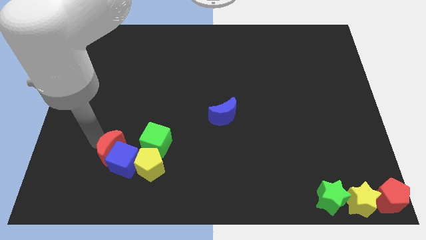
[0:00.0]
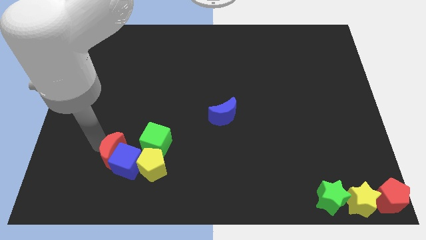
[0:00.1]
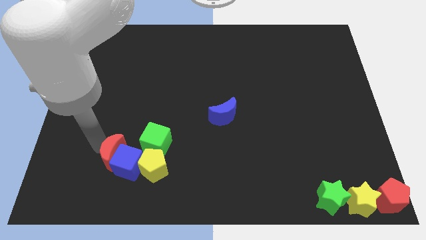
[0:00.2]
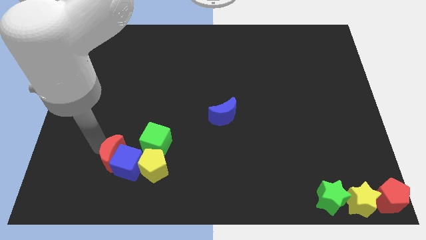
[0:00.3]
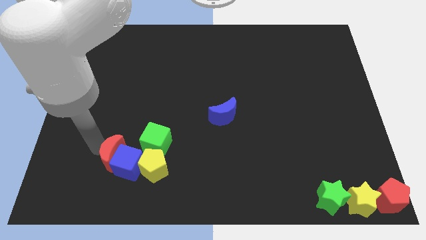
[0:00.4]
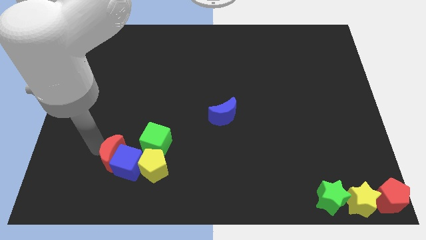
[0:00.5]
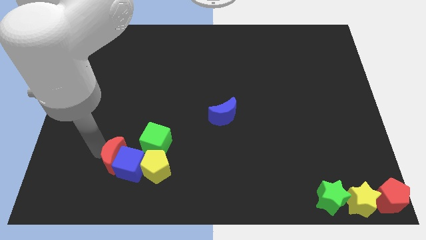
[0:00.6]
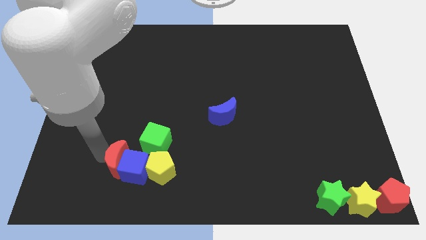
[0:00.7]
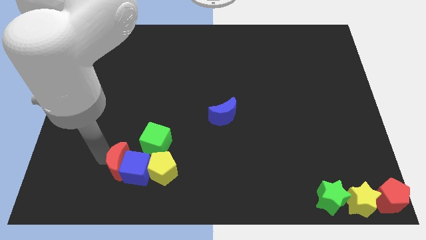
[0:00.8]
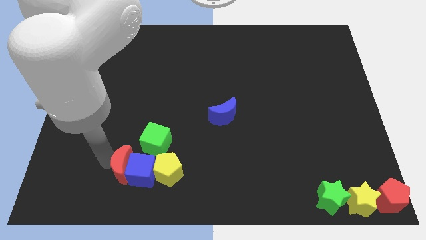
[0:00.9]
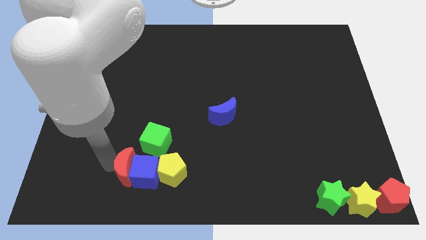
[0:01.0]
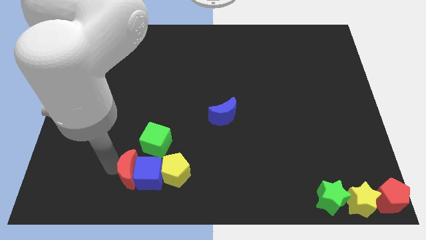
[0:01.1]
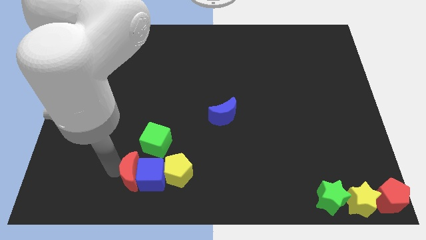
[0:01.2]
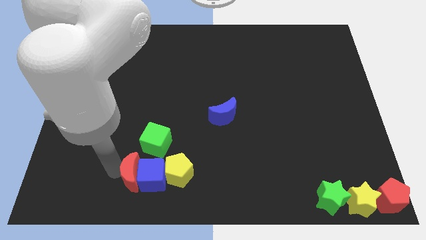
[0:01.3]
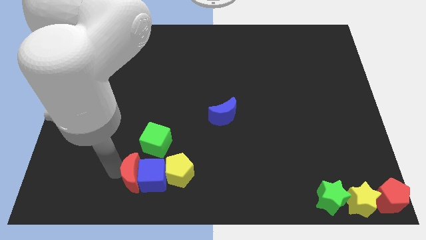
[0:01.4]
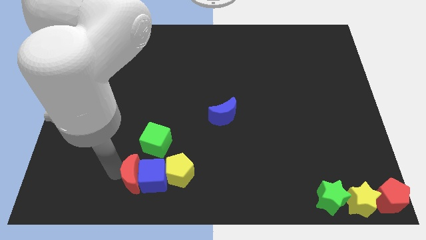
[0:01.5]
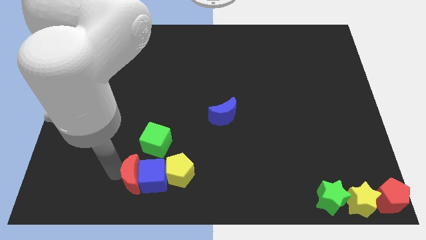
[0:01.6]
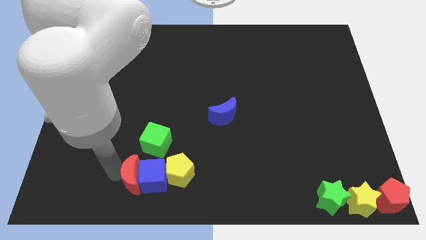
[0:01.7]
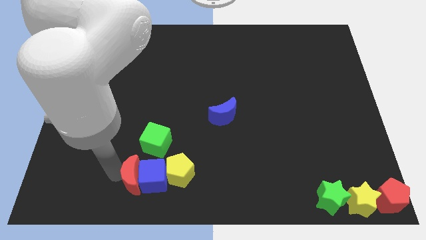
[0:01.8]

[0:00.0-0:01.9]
slide the red moon blue cube and the yellow pentagon to the right

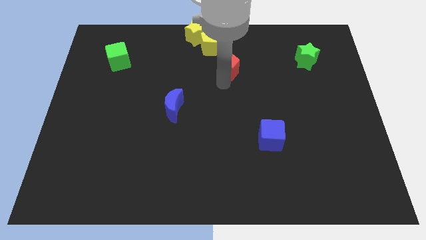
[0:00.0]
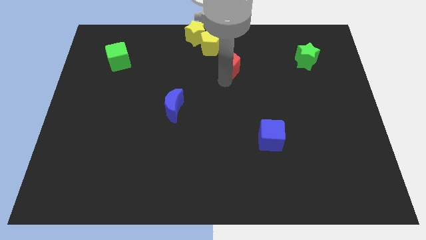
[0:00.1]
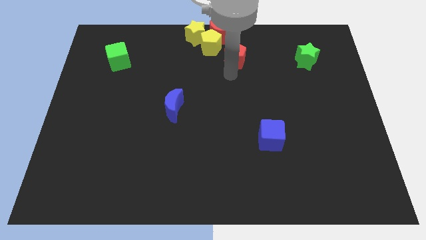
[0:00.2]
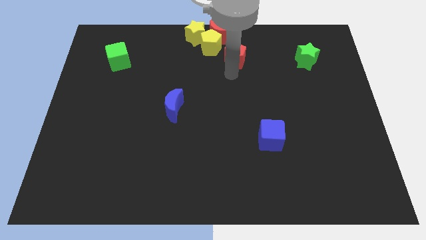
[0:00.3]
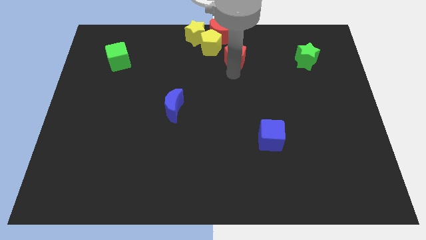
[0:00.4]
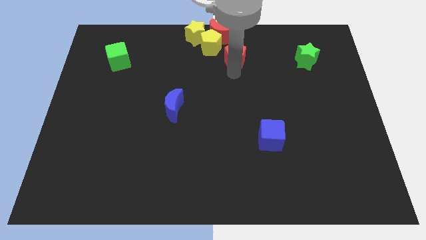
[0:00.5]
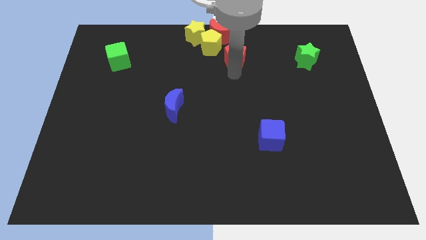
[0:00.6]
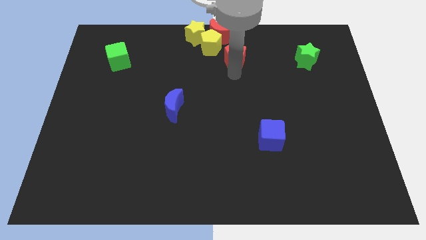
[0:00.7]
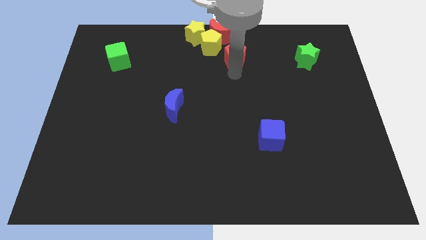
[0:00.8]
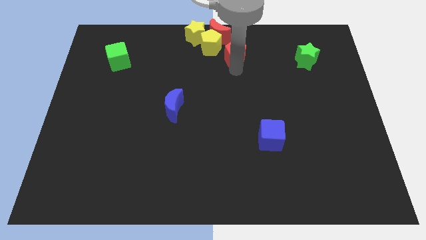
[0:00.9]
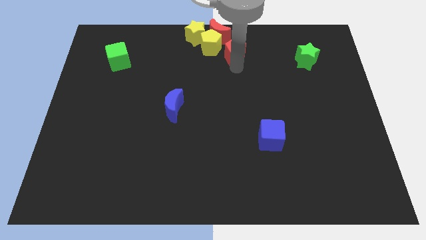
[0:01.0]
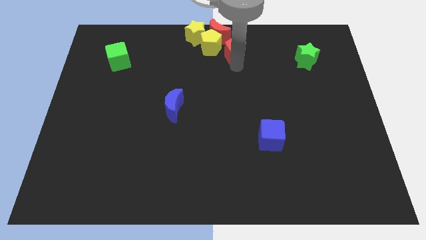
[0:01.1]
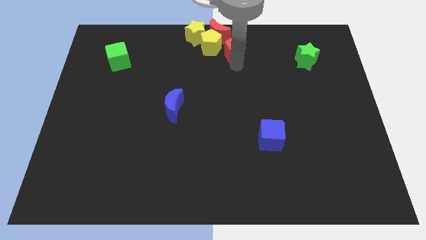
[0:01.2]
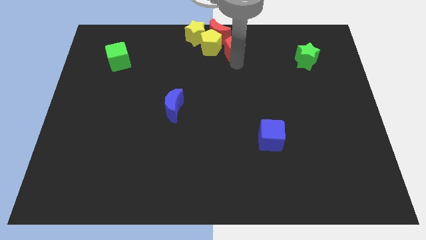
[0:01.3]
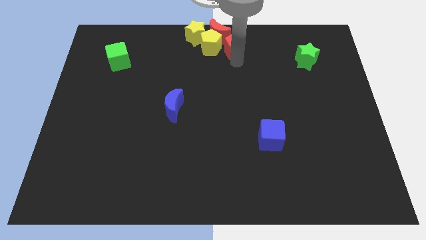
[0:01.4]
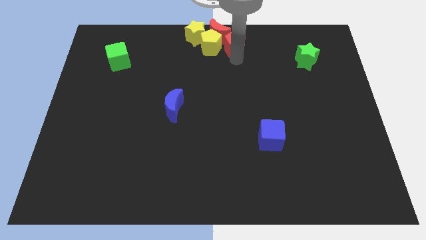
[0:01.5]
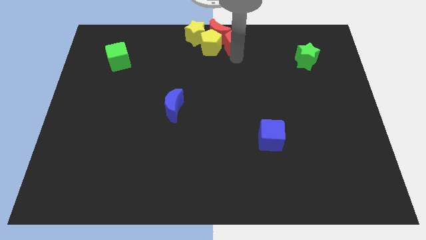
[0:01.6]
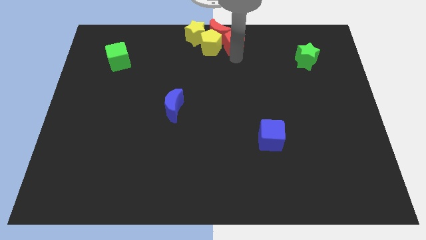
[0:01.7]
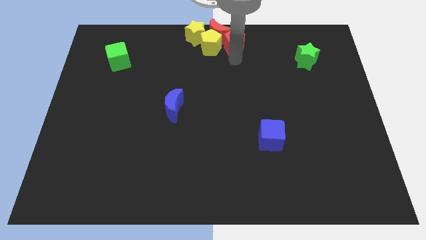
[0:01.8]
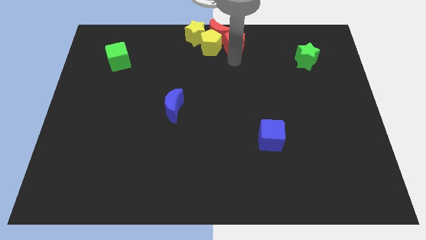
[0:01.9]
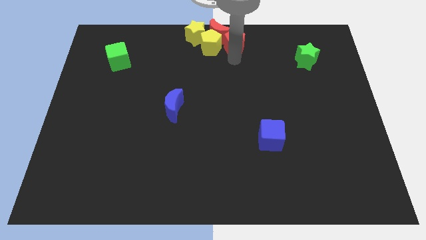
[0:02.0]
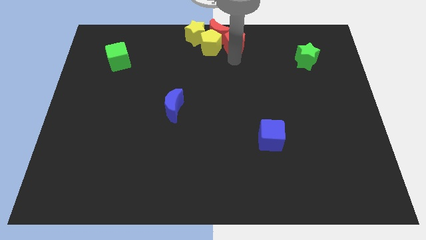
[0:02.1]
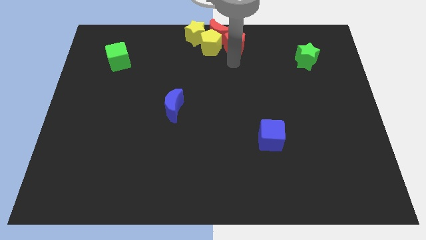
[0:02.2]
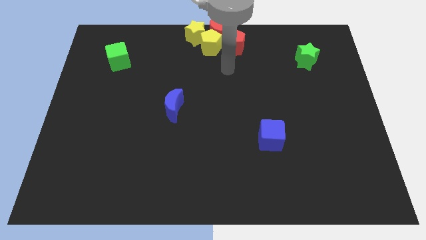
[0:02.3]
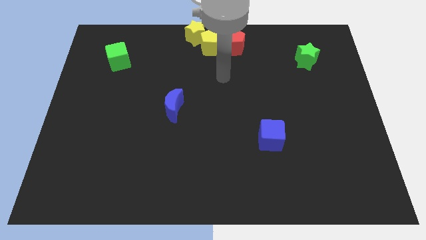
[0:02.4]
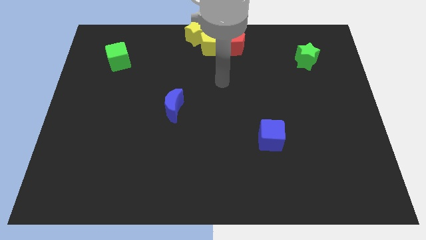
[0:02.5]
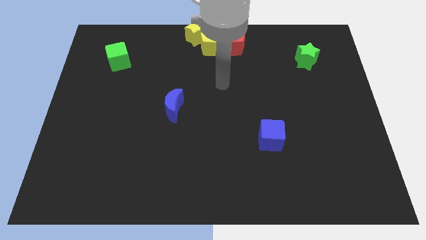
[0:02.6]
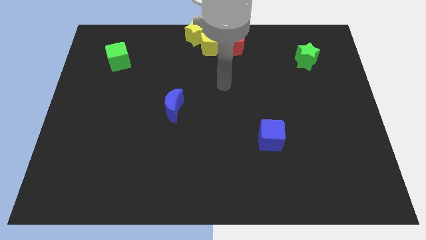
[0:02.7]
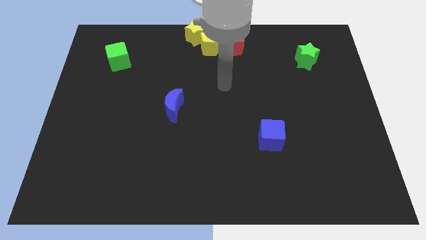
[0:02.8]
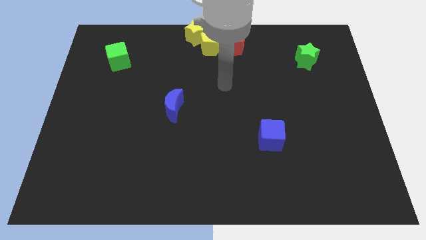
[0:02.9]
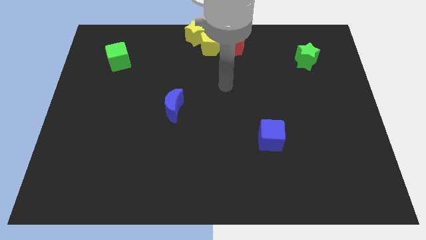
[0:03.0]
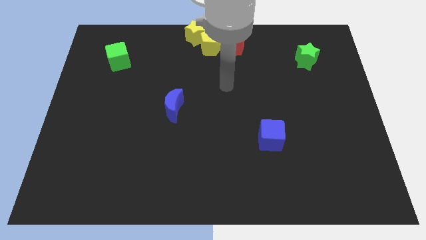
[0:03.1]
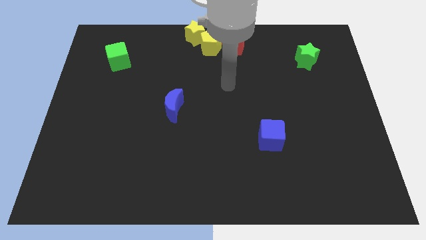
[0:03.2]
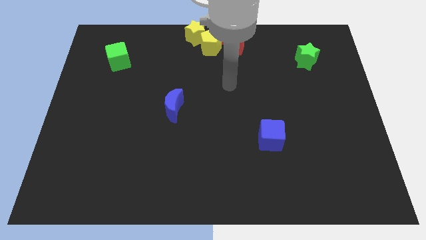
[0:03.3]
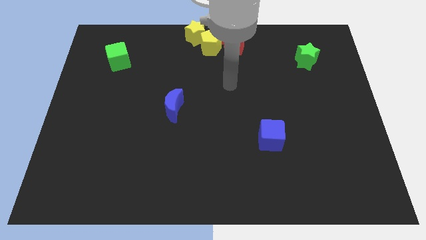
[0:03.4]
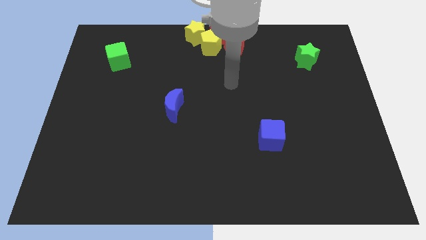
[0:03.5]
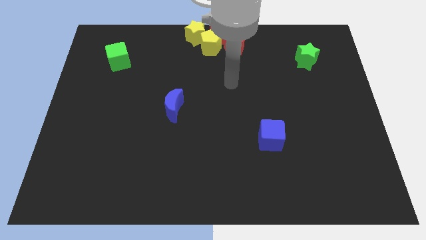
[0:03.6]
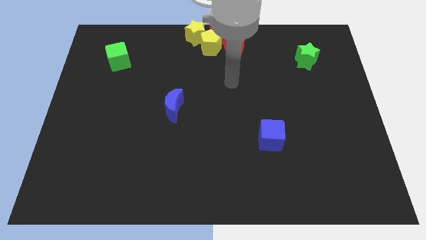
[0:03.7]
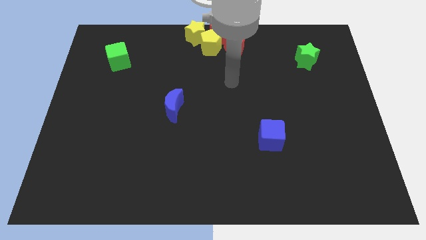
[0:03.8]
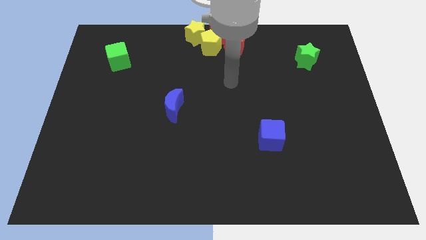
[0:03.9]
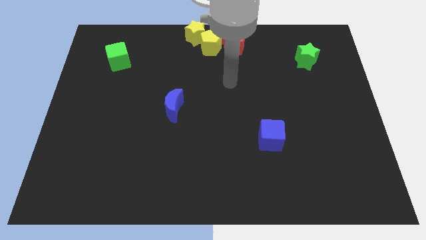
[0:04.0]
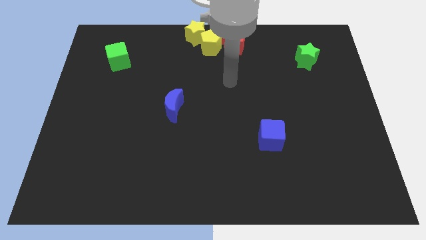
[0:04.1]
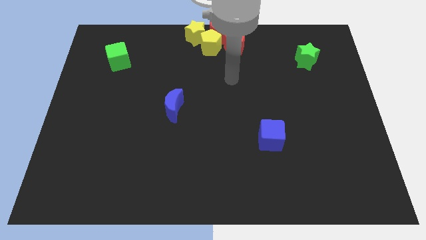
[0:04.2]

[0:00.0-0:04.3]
move the red pentagon into the red moon

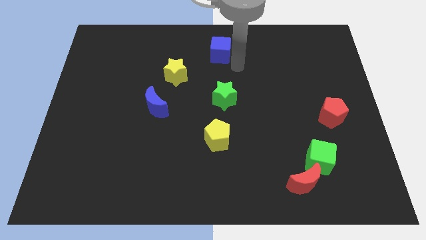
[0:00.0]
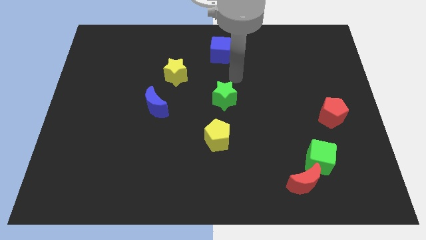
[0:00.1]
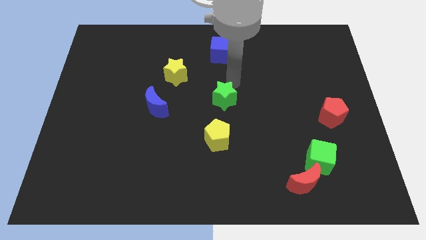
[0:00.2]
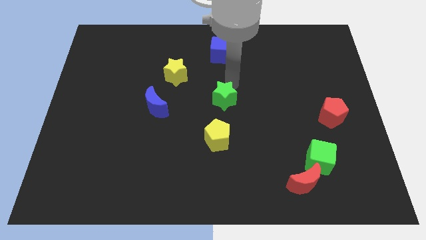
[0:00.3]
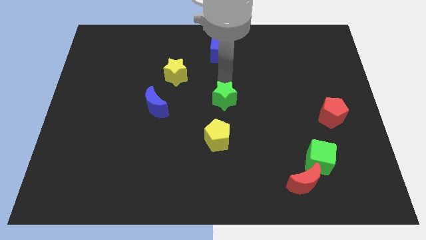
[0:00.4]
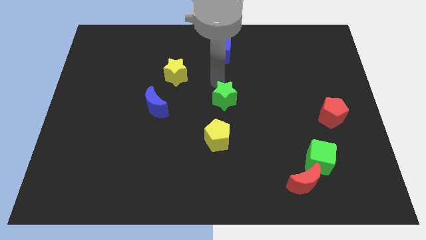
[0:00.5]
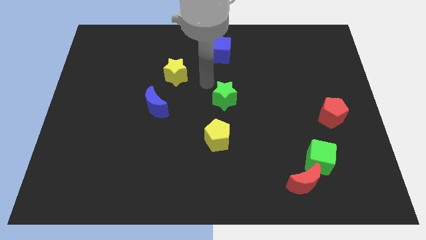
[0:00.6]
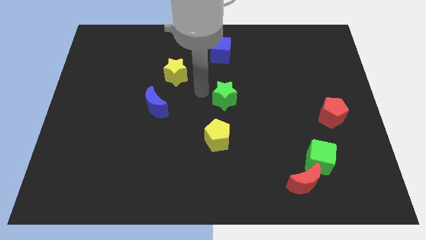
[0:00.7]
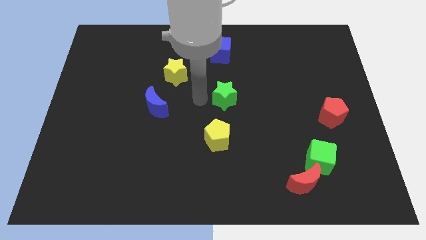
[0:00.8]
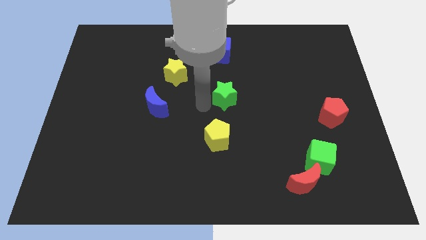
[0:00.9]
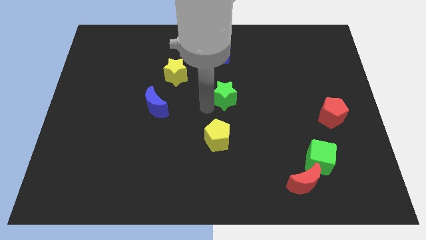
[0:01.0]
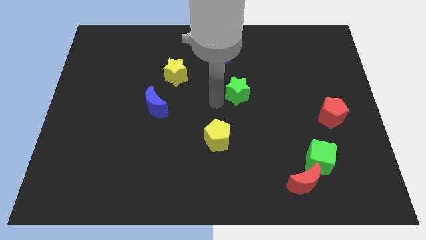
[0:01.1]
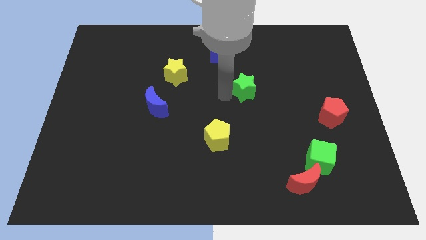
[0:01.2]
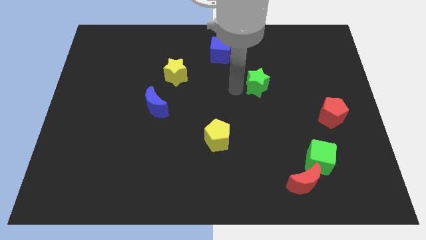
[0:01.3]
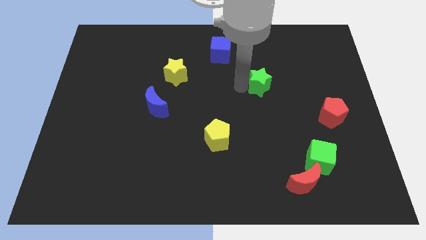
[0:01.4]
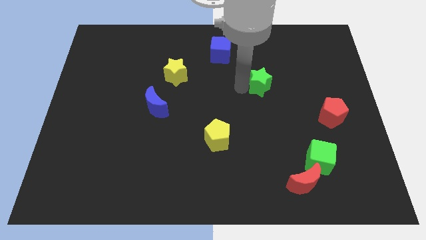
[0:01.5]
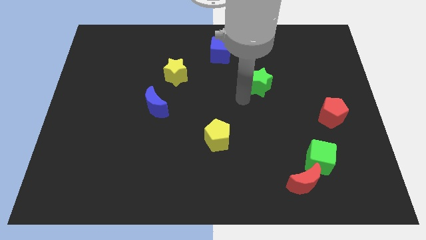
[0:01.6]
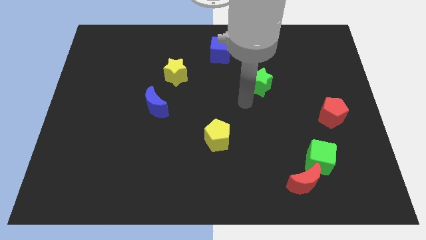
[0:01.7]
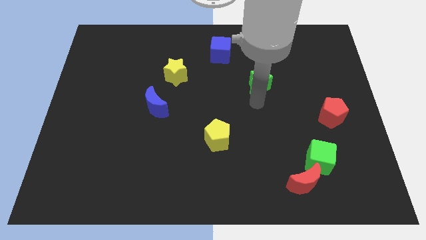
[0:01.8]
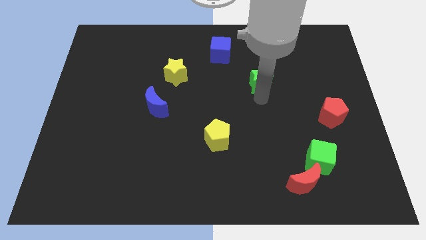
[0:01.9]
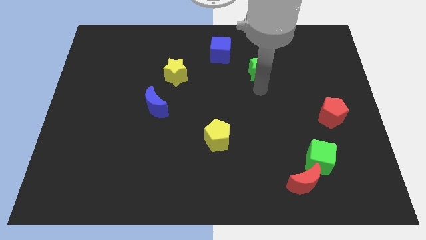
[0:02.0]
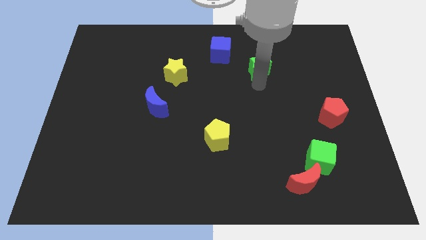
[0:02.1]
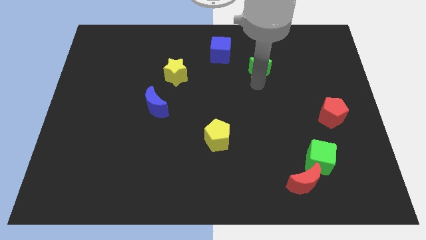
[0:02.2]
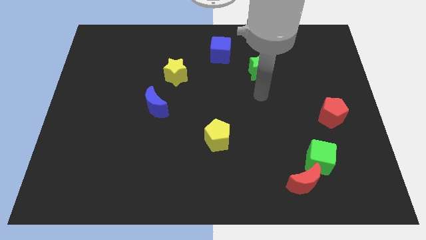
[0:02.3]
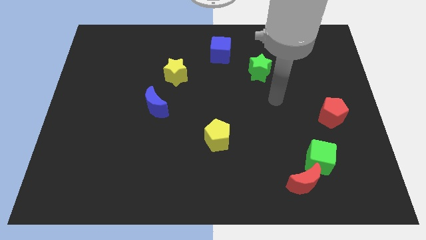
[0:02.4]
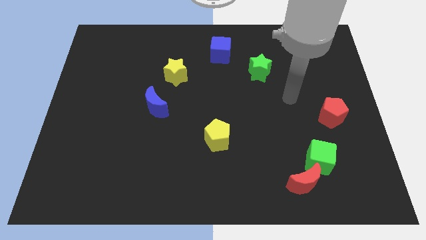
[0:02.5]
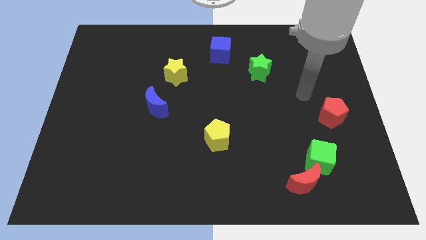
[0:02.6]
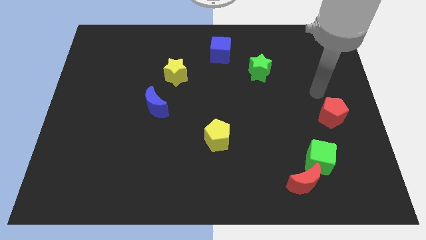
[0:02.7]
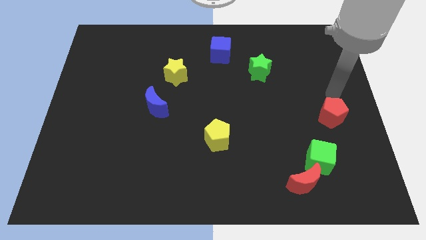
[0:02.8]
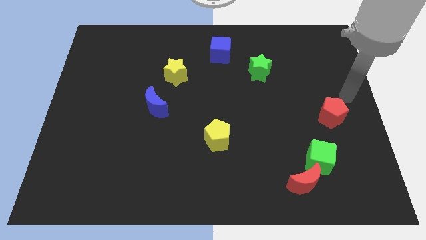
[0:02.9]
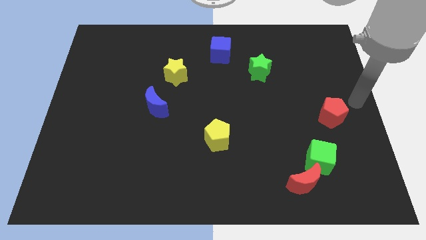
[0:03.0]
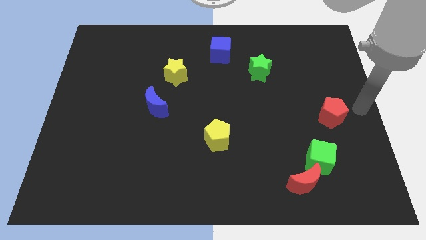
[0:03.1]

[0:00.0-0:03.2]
push the green star slightly to the top of the board
